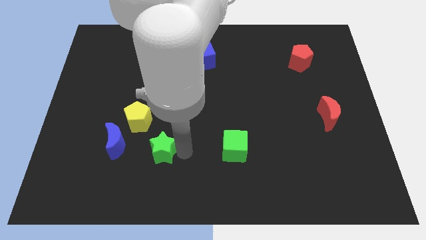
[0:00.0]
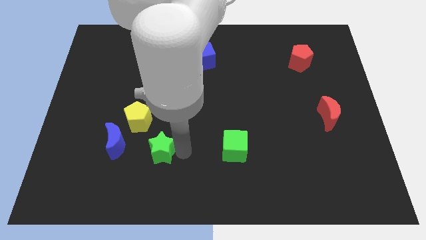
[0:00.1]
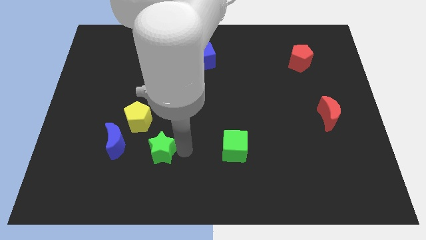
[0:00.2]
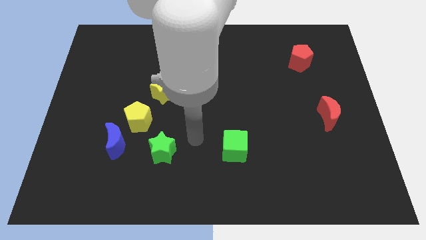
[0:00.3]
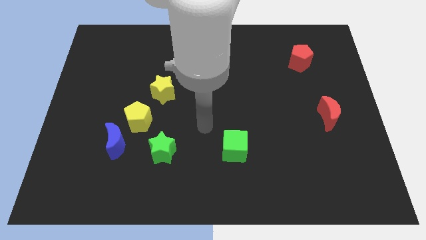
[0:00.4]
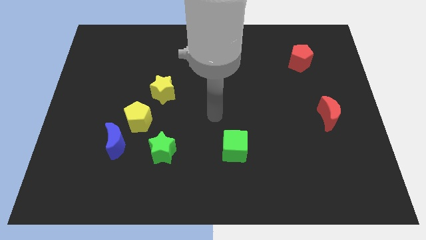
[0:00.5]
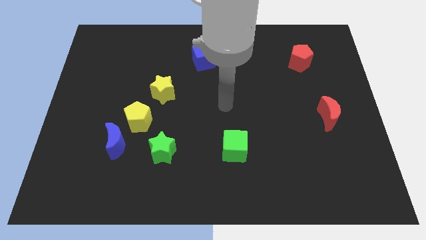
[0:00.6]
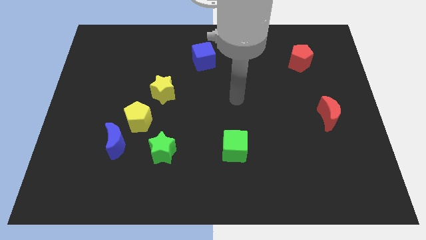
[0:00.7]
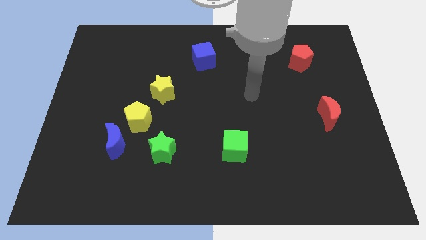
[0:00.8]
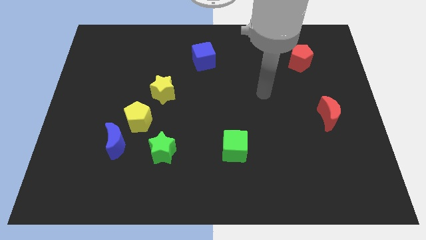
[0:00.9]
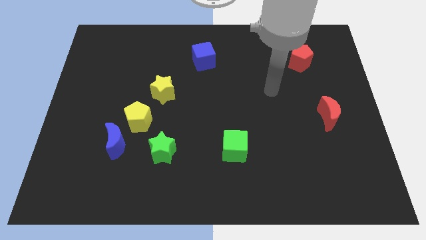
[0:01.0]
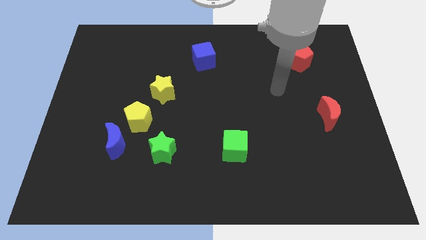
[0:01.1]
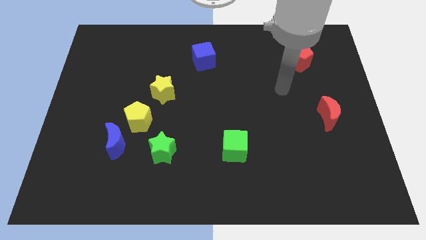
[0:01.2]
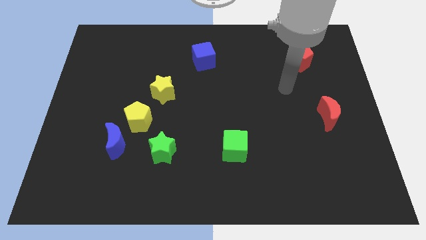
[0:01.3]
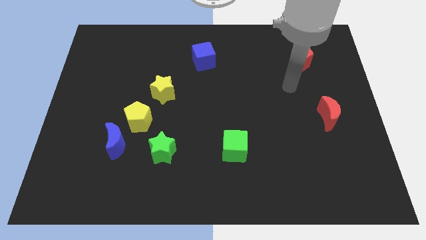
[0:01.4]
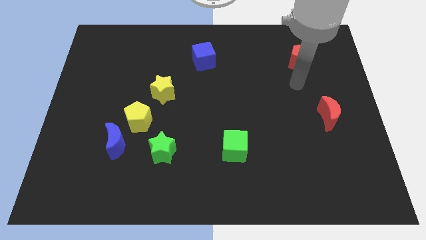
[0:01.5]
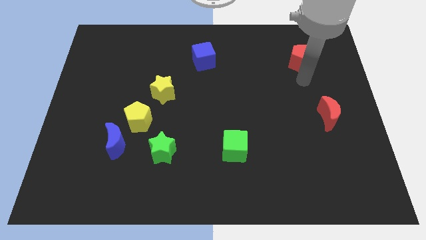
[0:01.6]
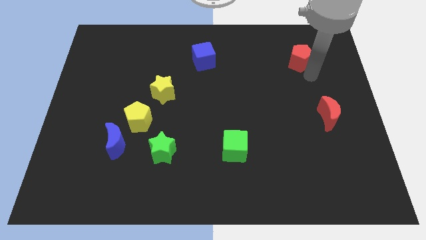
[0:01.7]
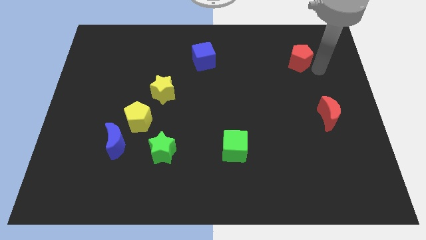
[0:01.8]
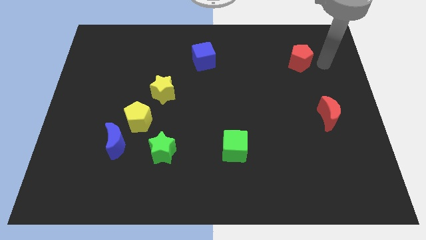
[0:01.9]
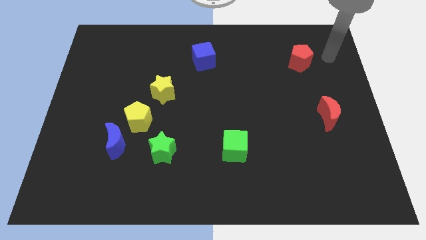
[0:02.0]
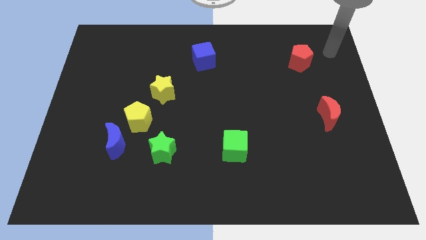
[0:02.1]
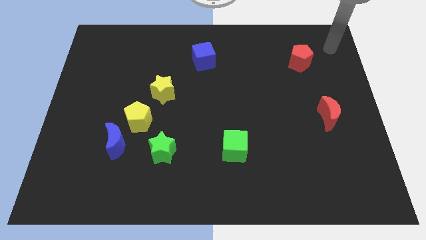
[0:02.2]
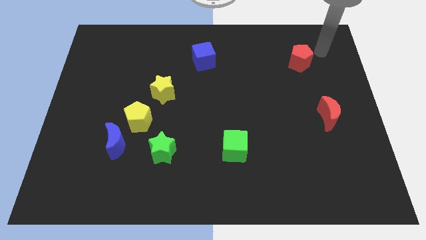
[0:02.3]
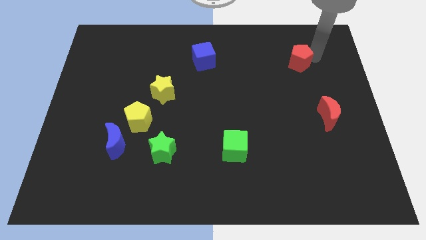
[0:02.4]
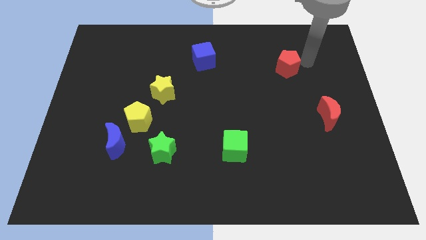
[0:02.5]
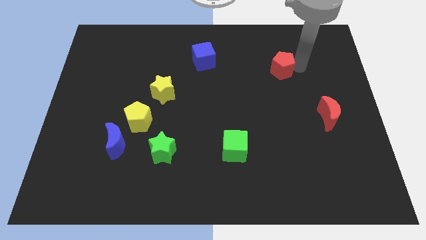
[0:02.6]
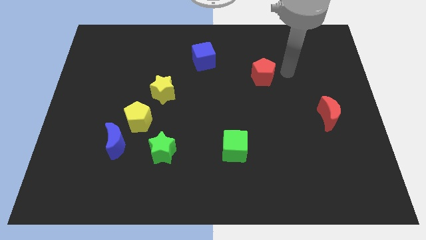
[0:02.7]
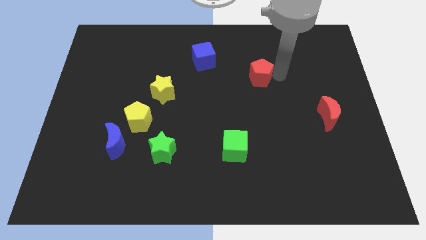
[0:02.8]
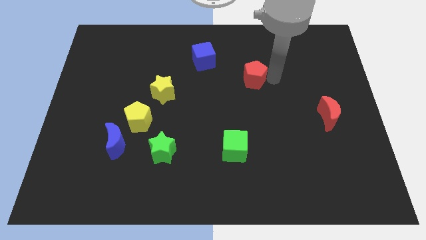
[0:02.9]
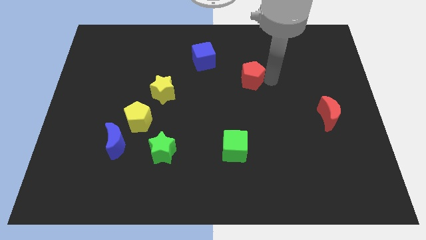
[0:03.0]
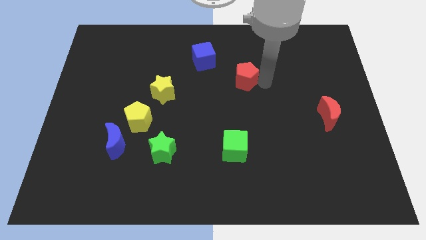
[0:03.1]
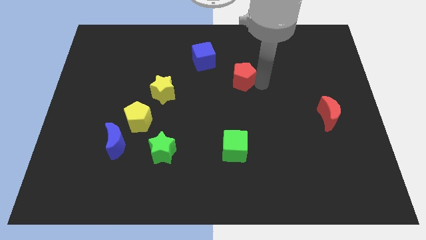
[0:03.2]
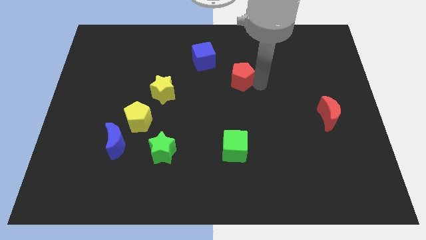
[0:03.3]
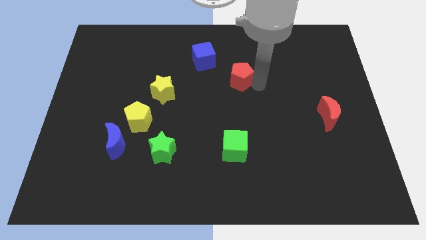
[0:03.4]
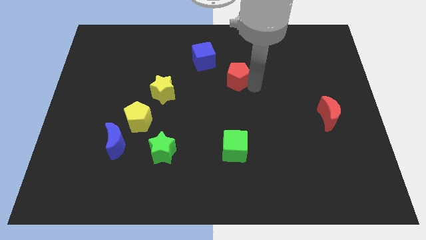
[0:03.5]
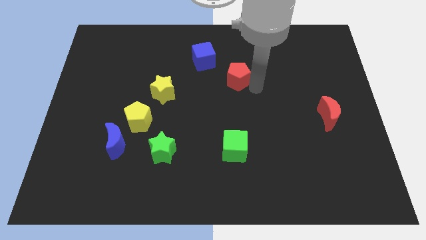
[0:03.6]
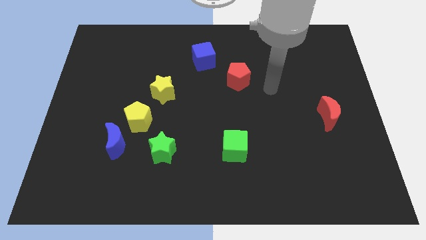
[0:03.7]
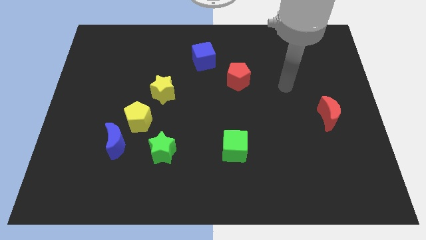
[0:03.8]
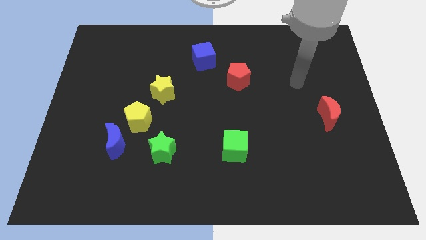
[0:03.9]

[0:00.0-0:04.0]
place the red pentagon above the green cube

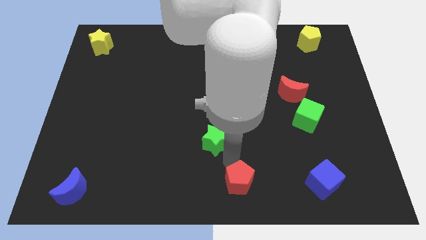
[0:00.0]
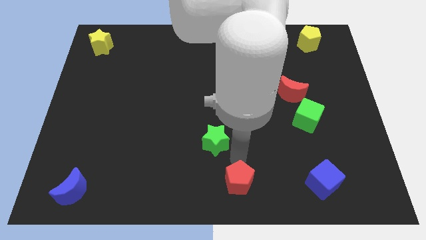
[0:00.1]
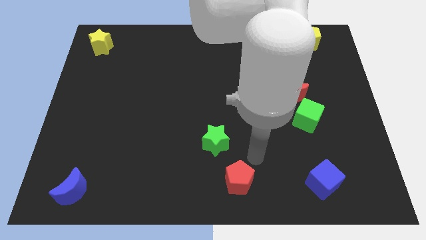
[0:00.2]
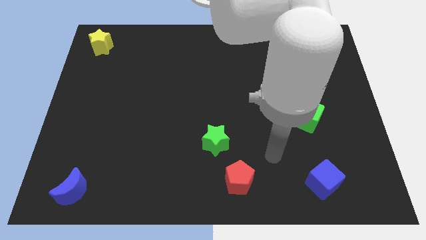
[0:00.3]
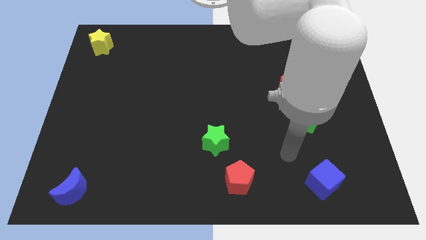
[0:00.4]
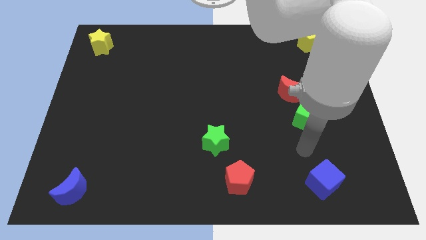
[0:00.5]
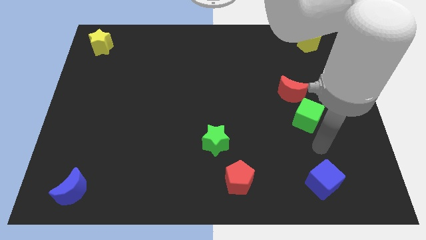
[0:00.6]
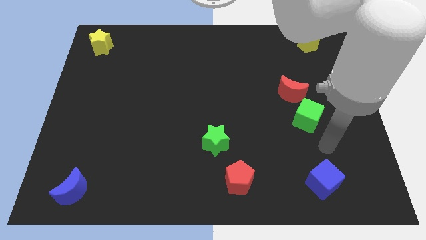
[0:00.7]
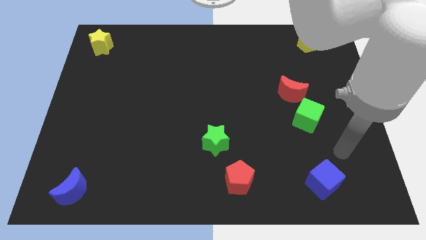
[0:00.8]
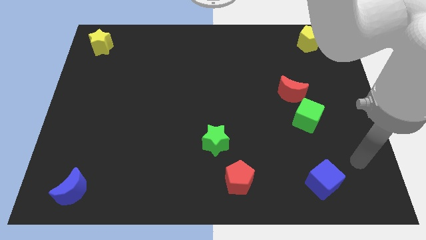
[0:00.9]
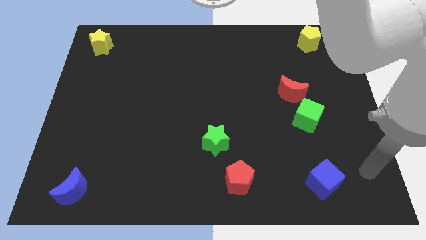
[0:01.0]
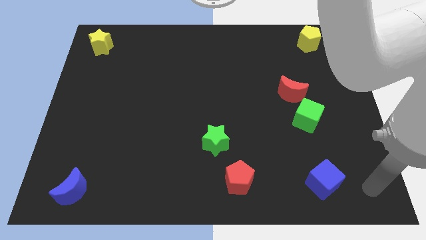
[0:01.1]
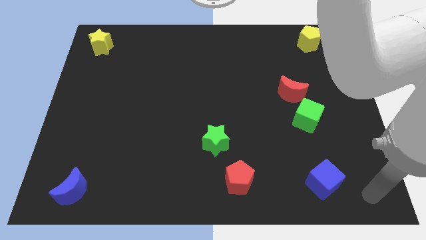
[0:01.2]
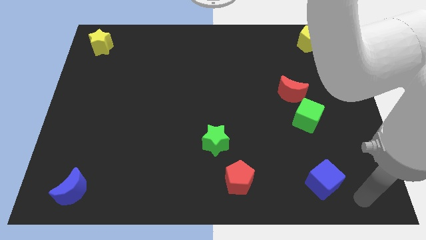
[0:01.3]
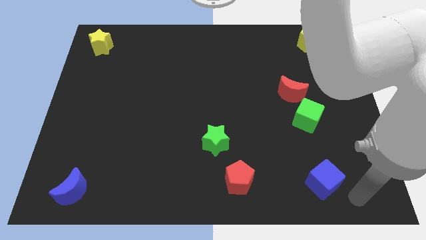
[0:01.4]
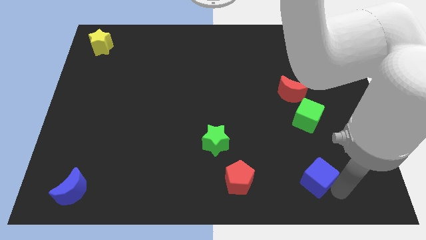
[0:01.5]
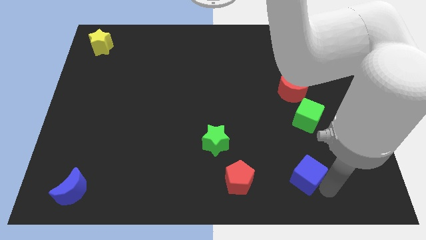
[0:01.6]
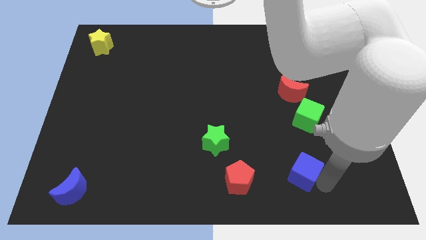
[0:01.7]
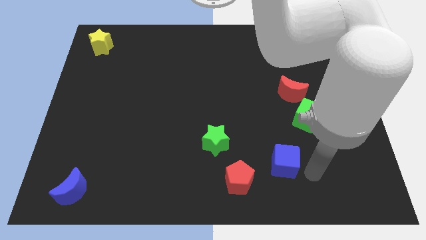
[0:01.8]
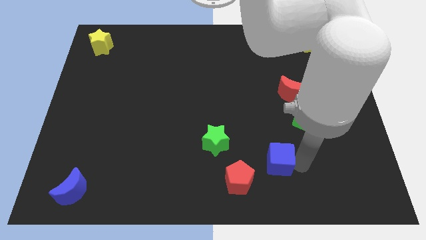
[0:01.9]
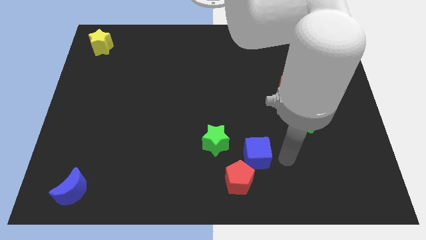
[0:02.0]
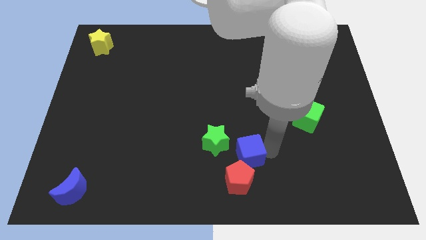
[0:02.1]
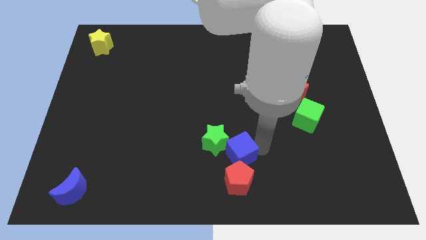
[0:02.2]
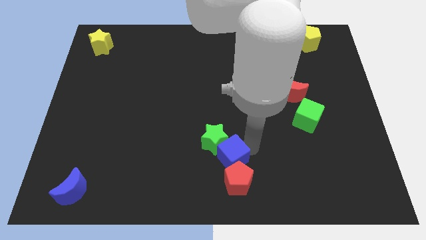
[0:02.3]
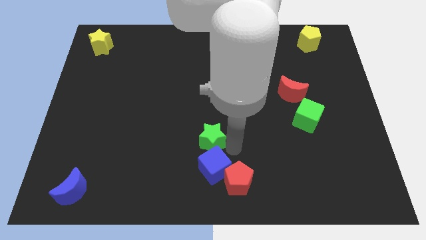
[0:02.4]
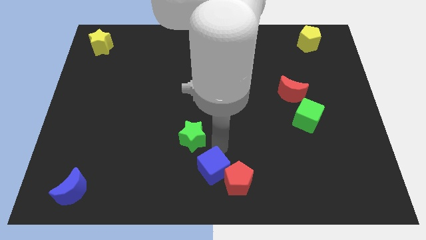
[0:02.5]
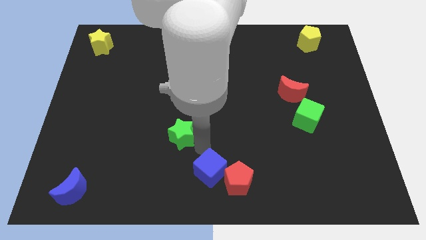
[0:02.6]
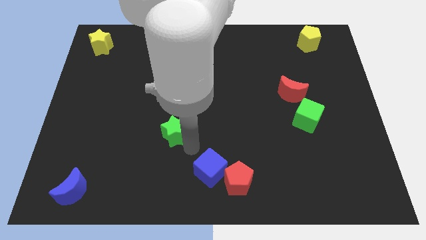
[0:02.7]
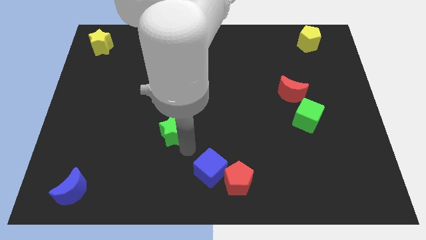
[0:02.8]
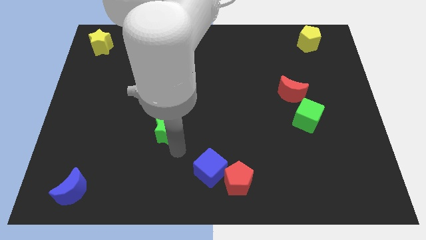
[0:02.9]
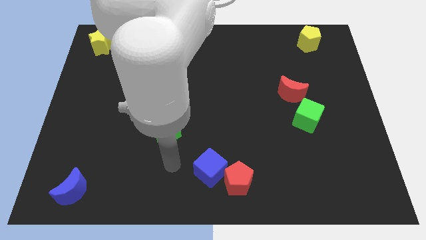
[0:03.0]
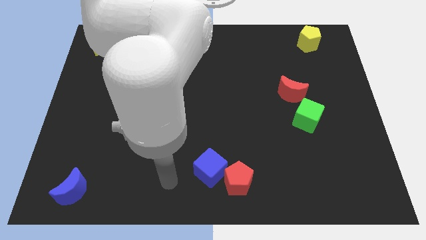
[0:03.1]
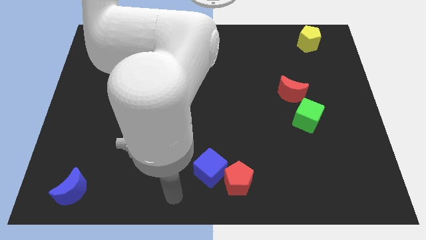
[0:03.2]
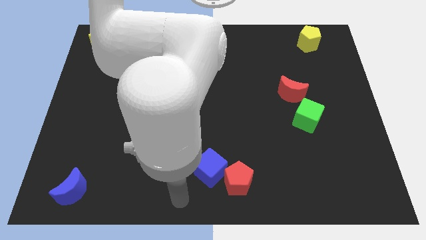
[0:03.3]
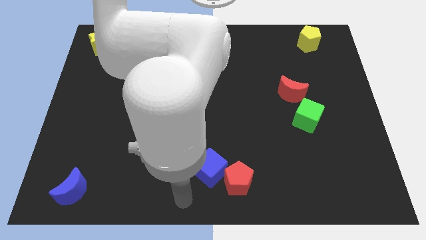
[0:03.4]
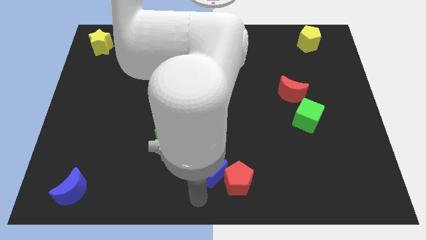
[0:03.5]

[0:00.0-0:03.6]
slide the blue cube to the left side of the red pentagon

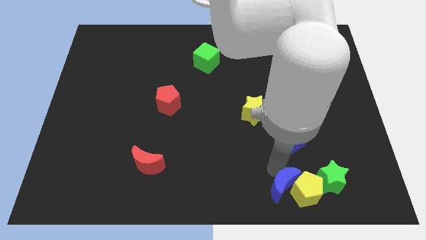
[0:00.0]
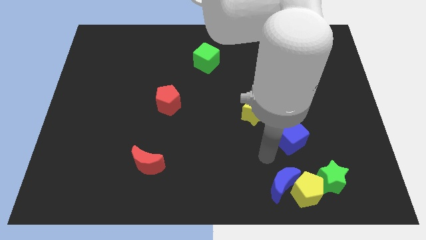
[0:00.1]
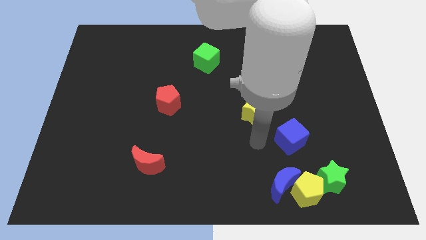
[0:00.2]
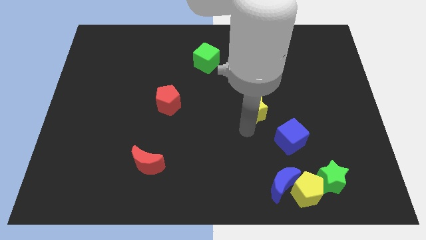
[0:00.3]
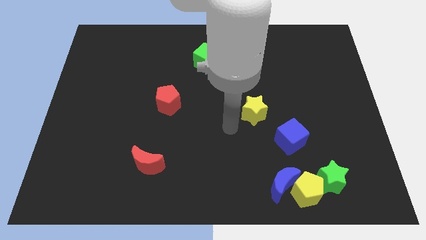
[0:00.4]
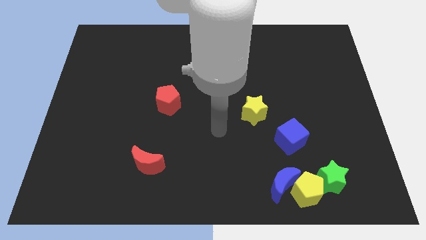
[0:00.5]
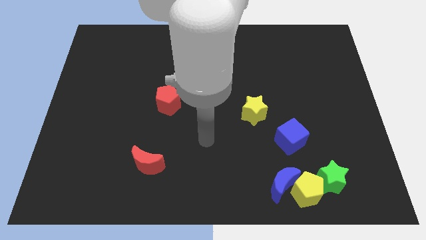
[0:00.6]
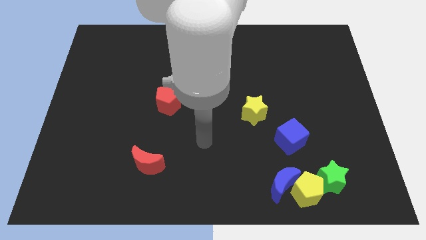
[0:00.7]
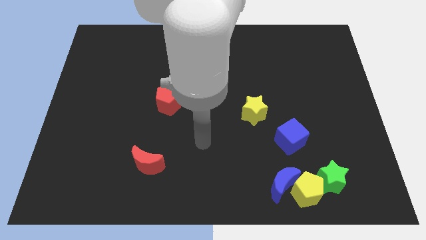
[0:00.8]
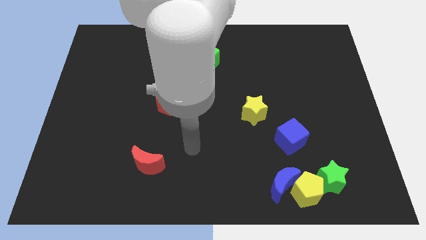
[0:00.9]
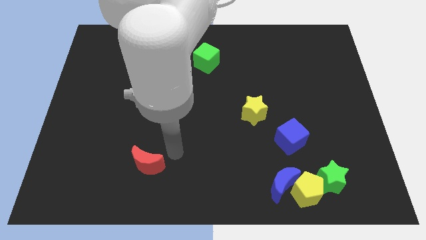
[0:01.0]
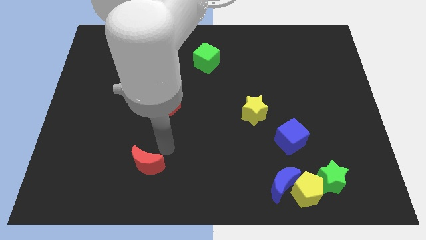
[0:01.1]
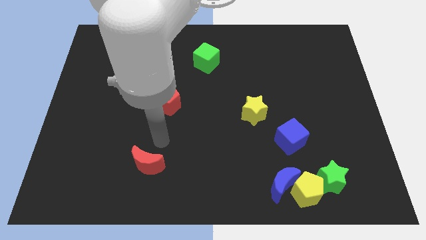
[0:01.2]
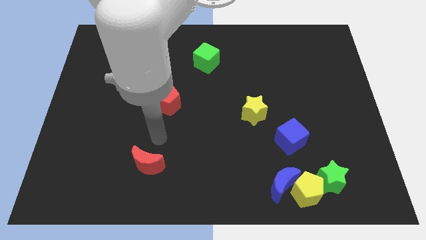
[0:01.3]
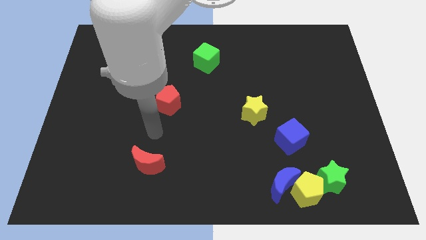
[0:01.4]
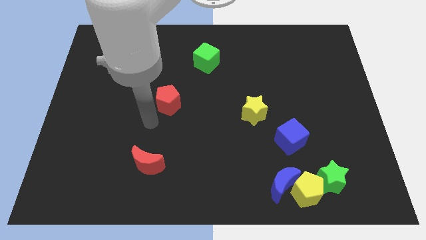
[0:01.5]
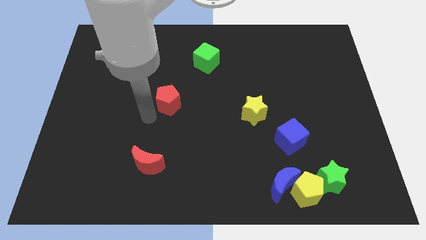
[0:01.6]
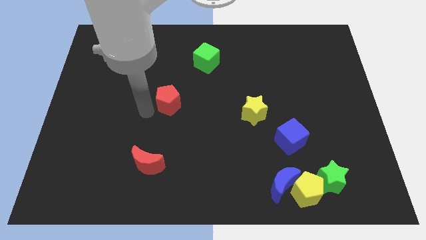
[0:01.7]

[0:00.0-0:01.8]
slide your arm away from the blue moon
